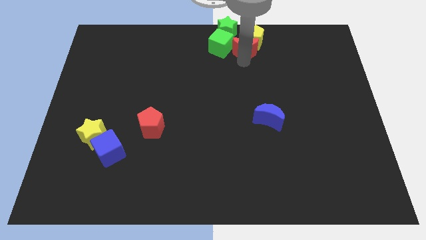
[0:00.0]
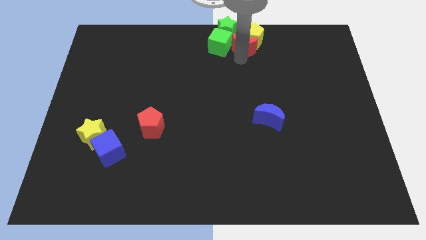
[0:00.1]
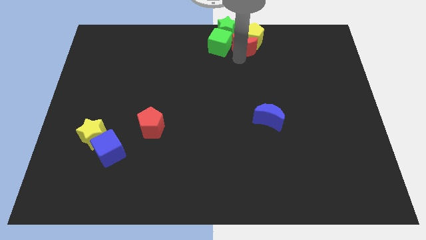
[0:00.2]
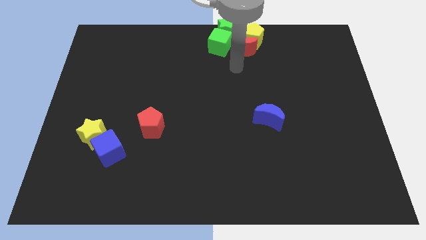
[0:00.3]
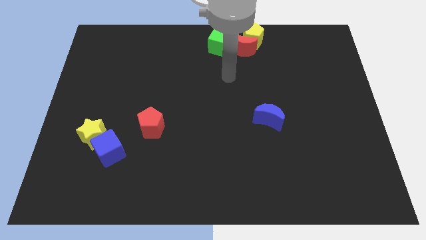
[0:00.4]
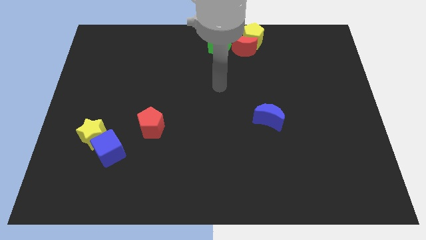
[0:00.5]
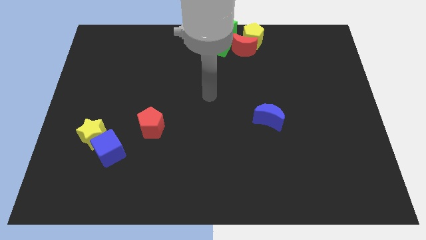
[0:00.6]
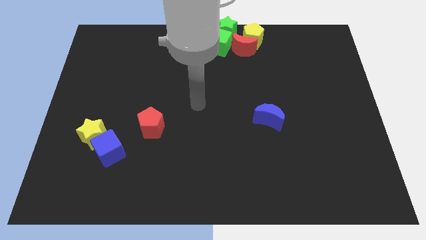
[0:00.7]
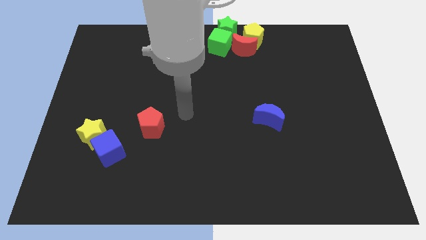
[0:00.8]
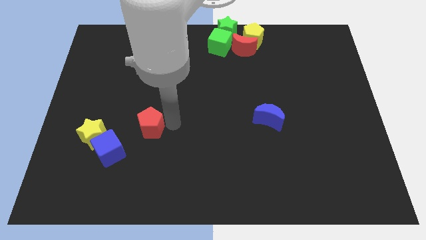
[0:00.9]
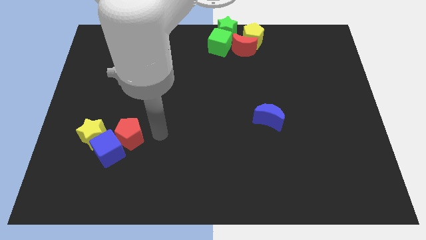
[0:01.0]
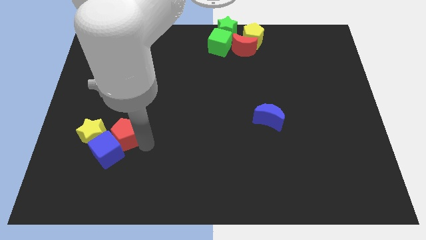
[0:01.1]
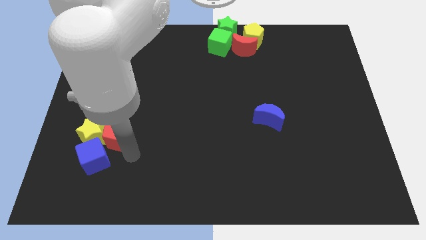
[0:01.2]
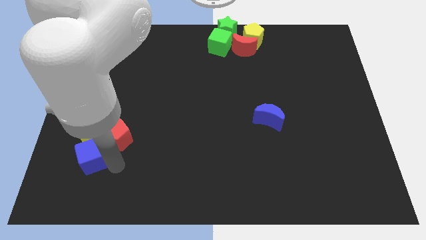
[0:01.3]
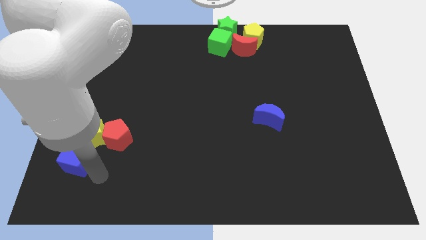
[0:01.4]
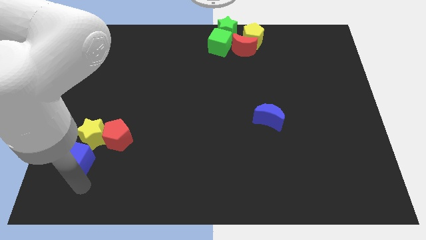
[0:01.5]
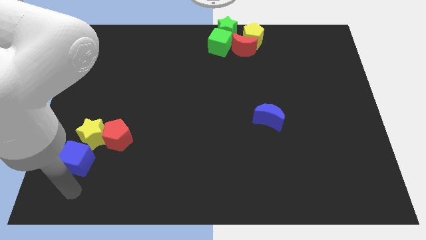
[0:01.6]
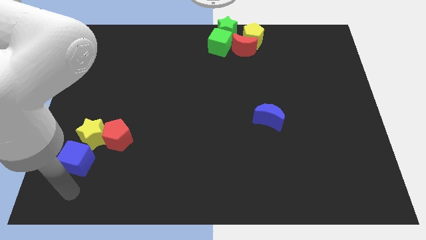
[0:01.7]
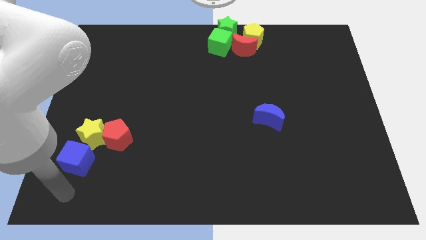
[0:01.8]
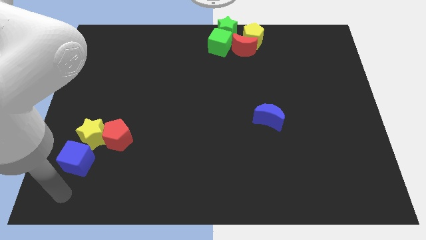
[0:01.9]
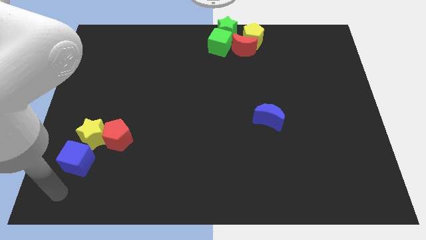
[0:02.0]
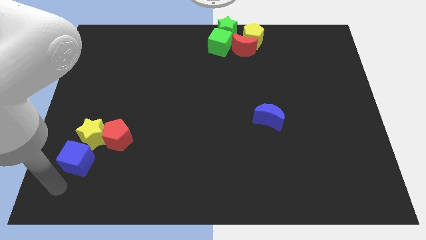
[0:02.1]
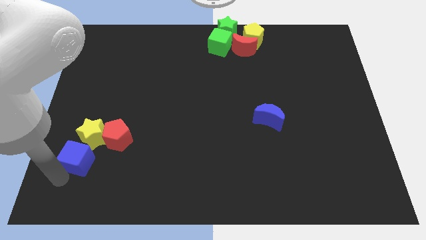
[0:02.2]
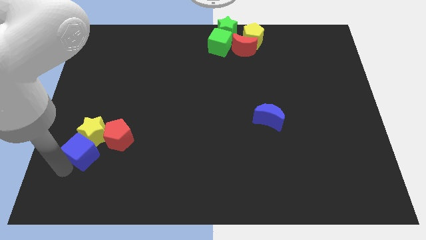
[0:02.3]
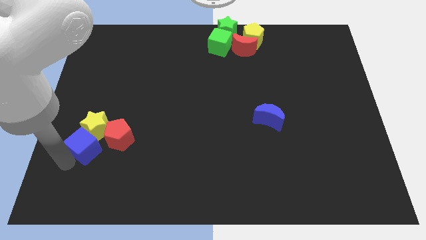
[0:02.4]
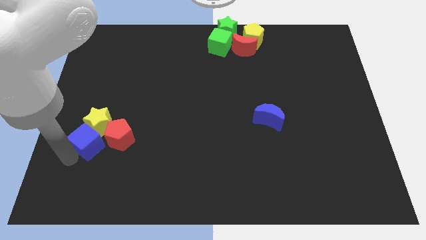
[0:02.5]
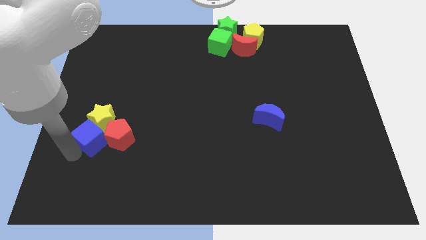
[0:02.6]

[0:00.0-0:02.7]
place red pentagon to the right of yellow star

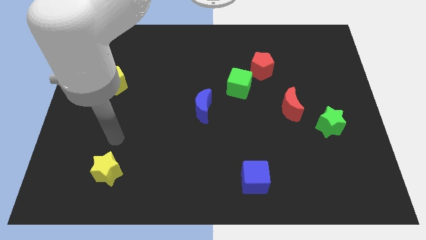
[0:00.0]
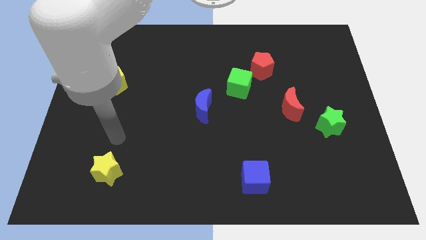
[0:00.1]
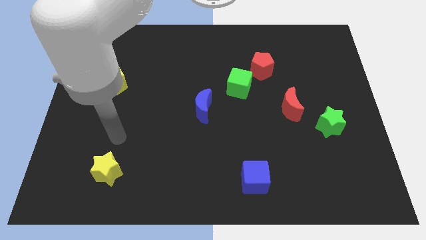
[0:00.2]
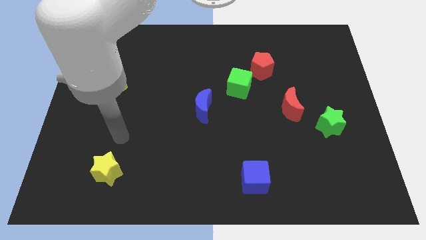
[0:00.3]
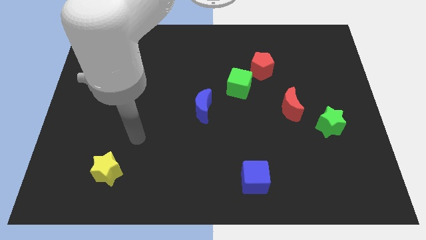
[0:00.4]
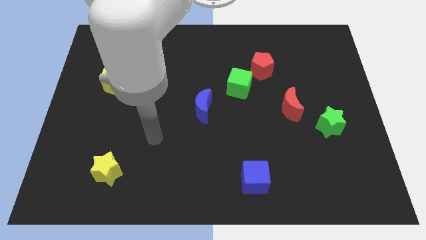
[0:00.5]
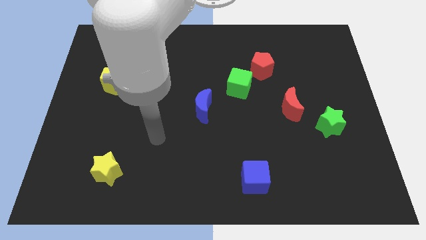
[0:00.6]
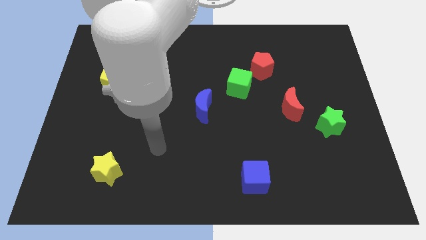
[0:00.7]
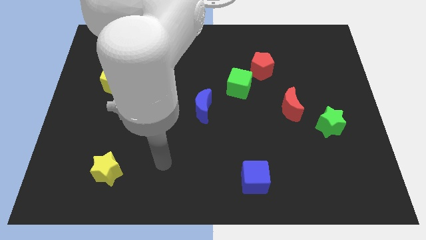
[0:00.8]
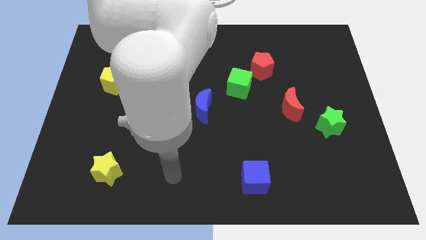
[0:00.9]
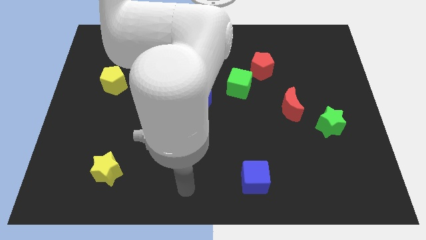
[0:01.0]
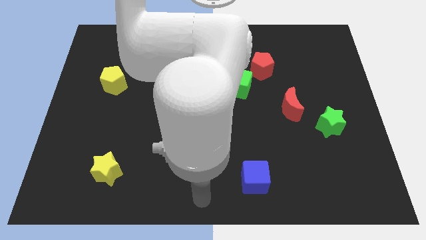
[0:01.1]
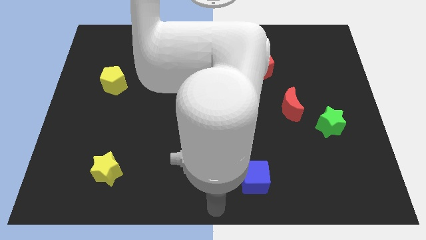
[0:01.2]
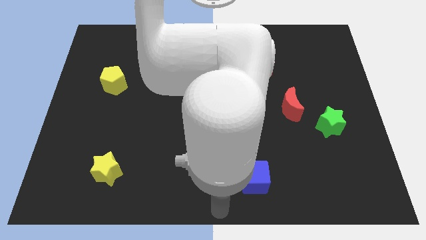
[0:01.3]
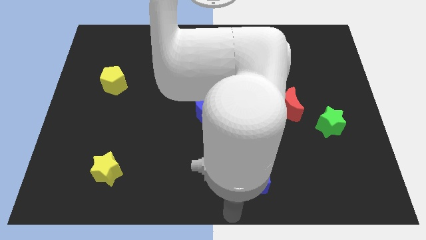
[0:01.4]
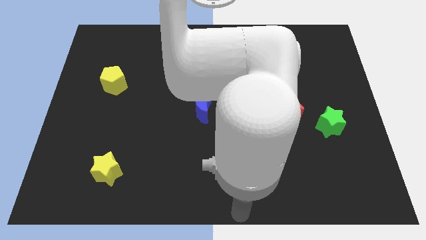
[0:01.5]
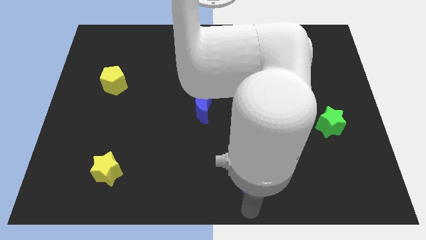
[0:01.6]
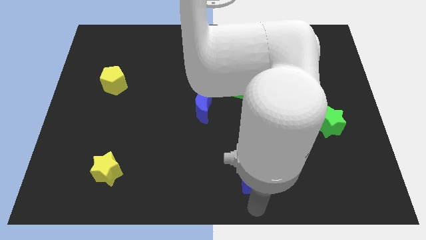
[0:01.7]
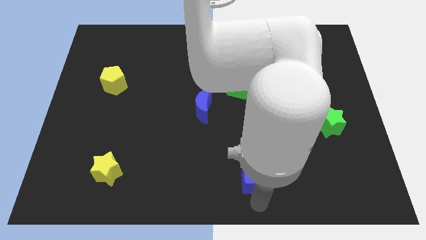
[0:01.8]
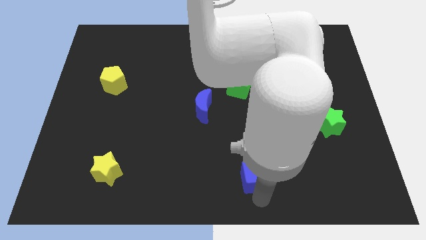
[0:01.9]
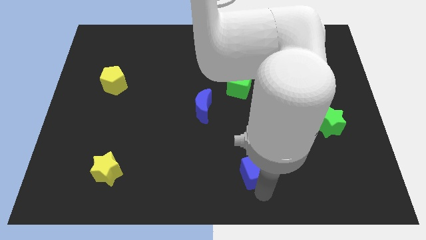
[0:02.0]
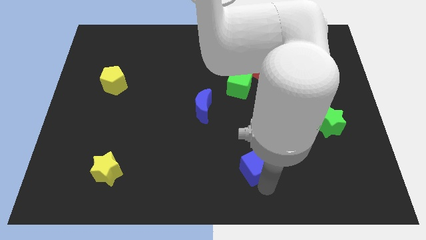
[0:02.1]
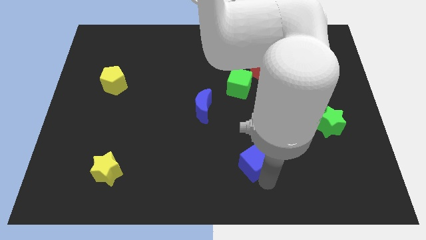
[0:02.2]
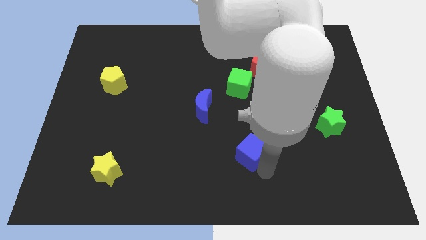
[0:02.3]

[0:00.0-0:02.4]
move your arm close to the blue cube

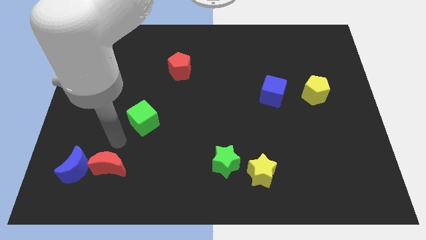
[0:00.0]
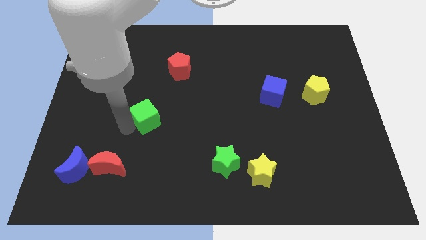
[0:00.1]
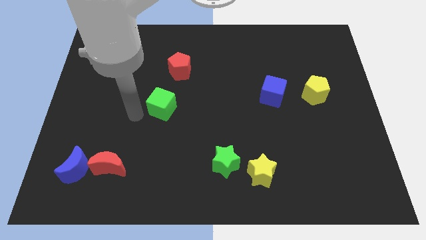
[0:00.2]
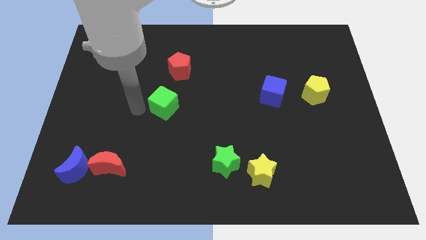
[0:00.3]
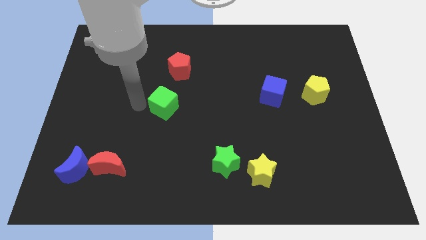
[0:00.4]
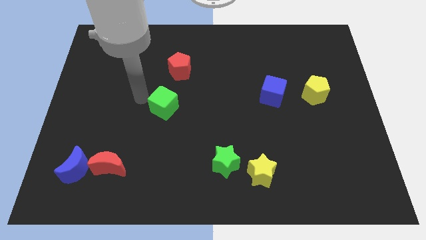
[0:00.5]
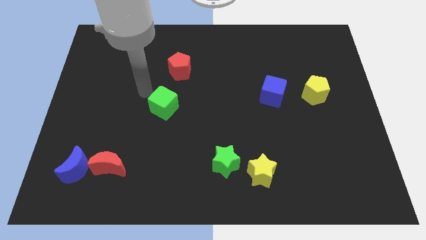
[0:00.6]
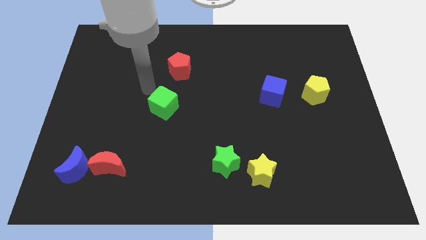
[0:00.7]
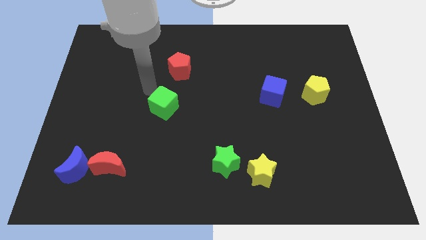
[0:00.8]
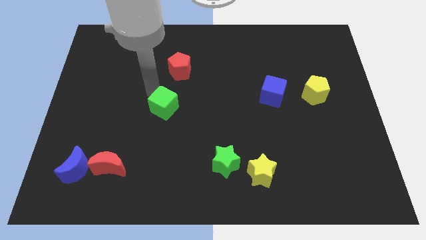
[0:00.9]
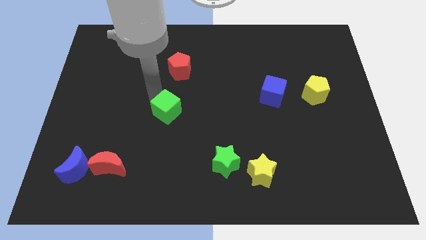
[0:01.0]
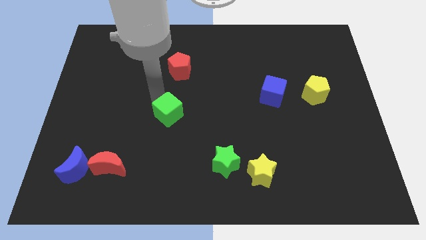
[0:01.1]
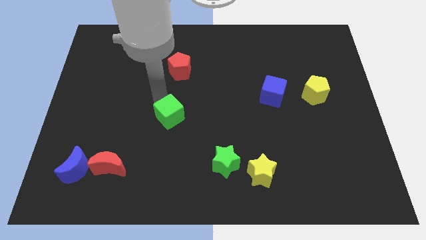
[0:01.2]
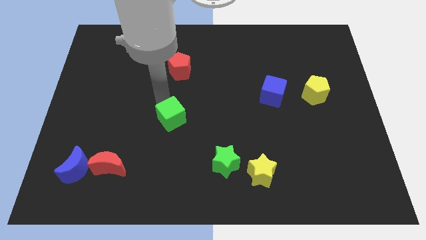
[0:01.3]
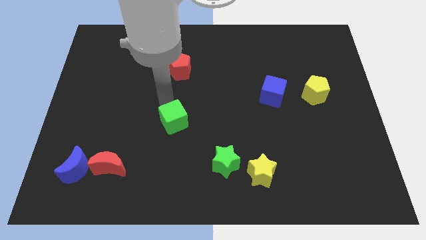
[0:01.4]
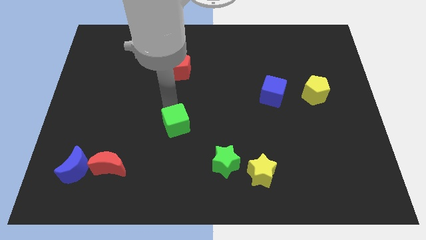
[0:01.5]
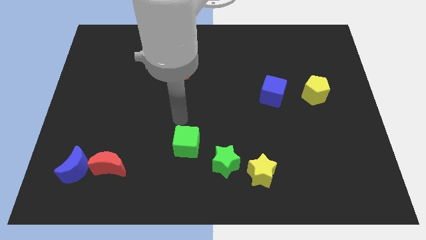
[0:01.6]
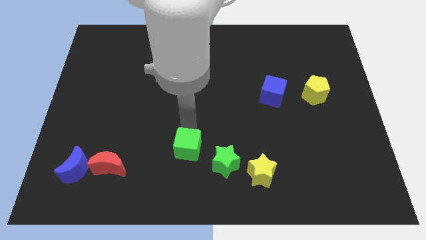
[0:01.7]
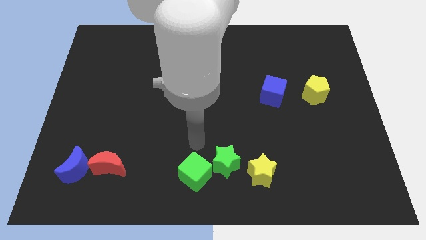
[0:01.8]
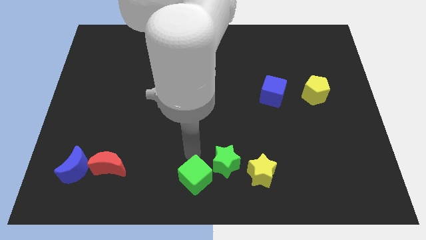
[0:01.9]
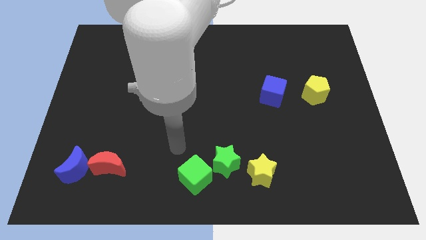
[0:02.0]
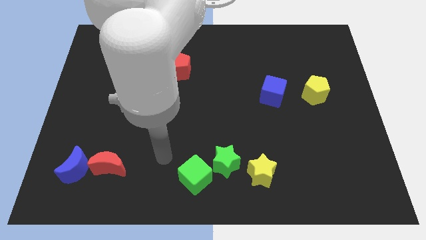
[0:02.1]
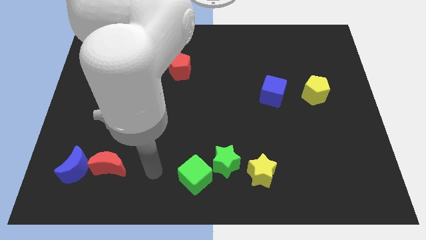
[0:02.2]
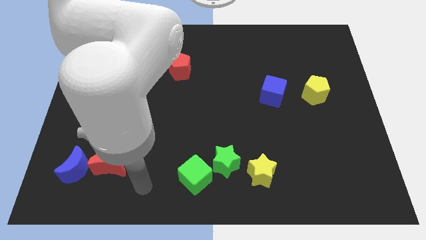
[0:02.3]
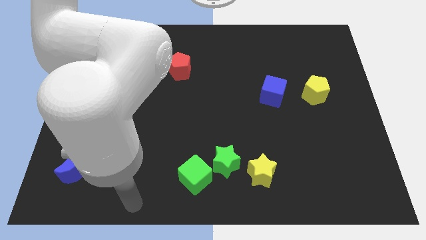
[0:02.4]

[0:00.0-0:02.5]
push the green cube towards the bottom center of the board

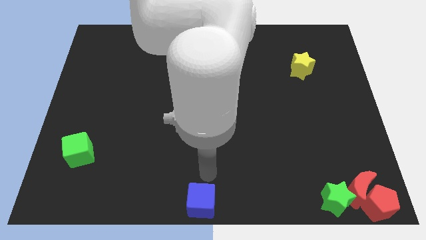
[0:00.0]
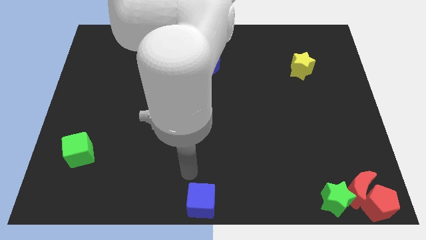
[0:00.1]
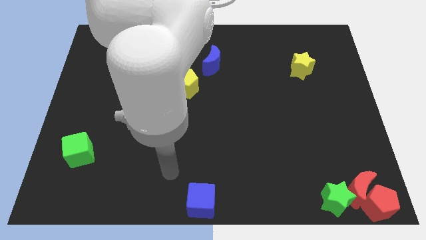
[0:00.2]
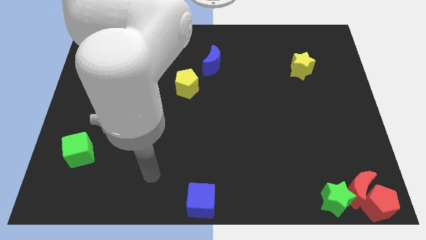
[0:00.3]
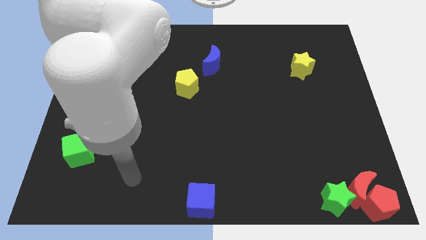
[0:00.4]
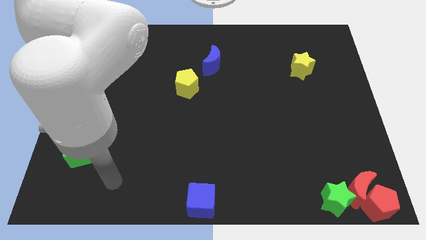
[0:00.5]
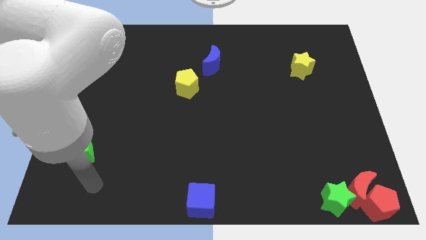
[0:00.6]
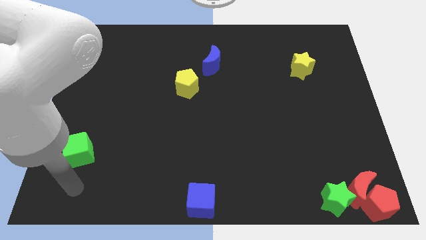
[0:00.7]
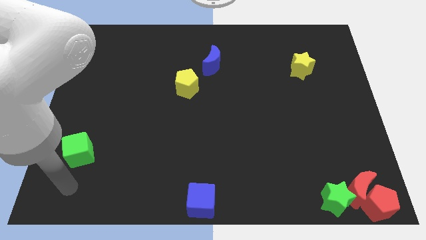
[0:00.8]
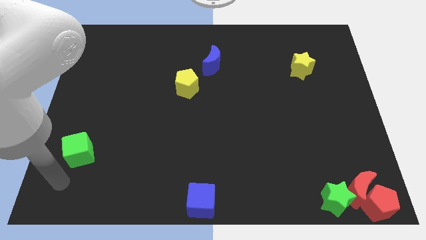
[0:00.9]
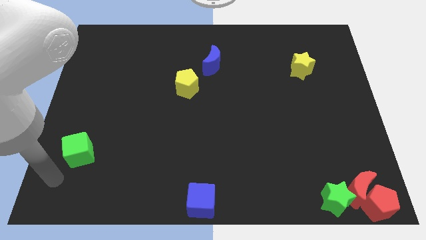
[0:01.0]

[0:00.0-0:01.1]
move your arm towards the bottom left side of the board

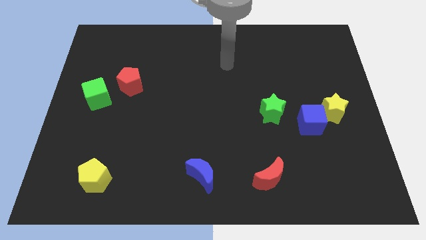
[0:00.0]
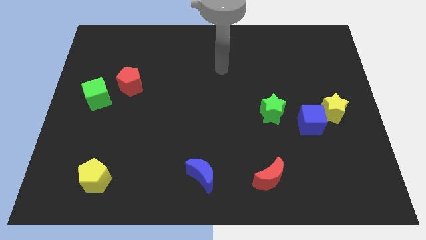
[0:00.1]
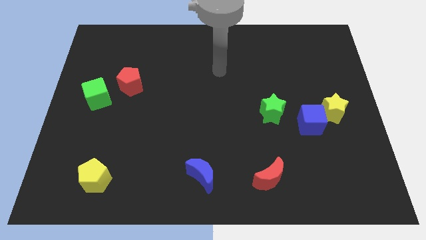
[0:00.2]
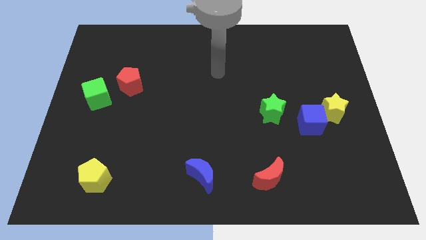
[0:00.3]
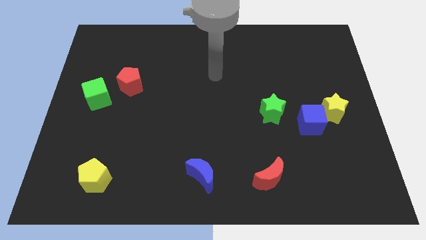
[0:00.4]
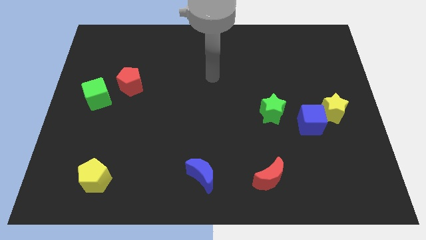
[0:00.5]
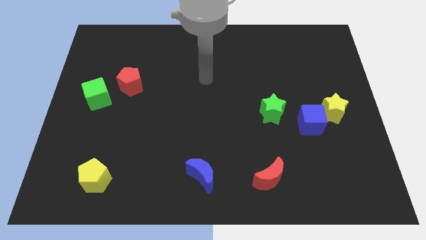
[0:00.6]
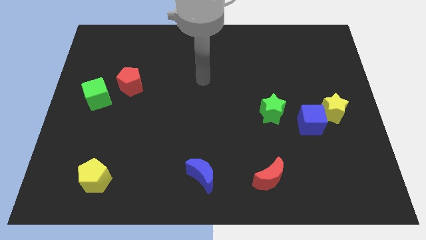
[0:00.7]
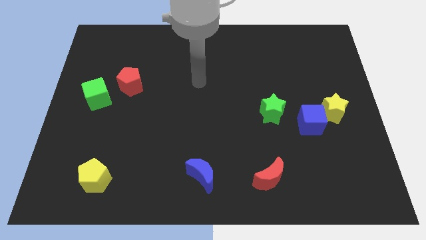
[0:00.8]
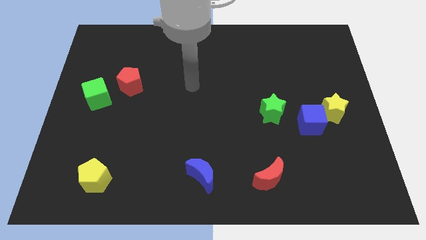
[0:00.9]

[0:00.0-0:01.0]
push your arm at center of the board
